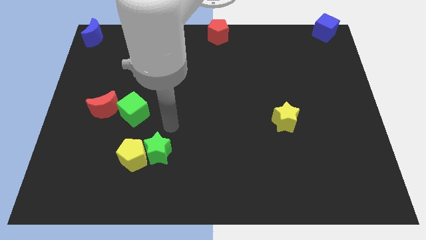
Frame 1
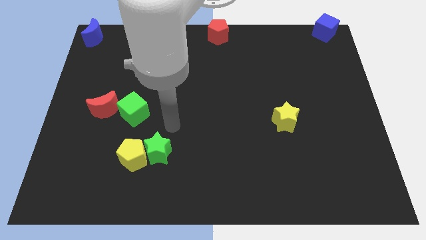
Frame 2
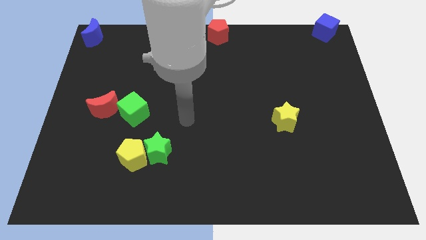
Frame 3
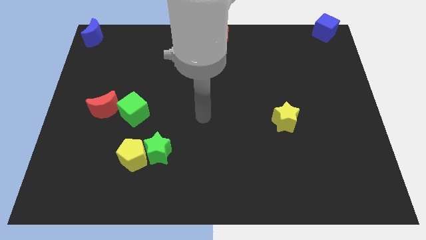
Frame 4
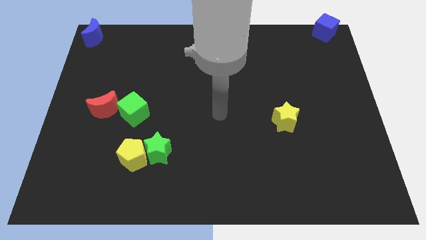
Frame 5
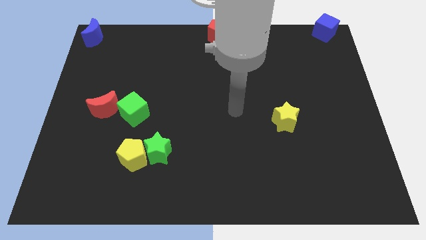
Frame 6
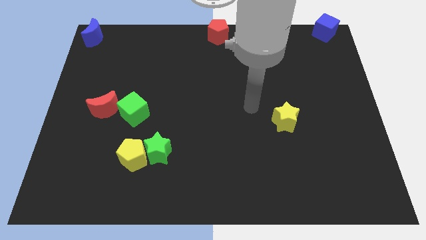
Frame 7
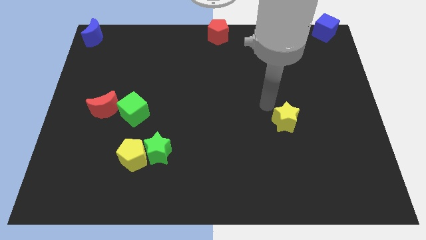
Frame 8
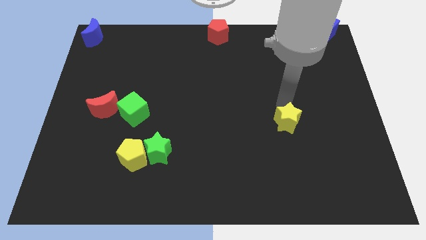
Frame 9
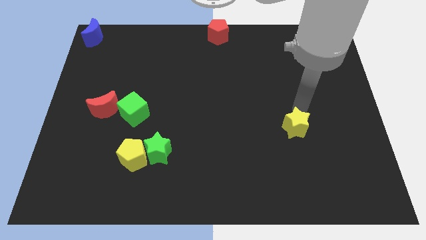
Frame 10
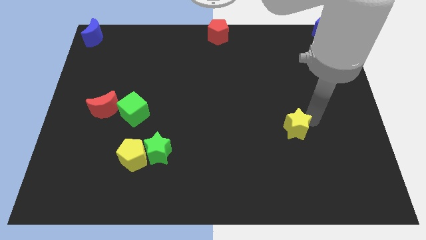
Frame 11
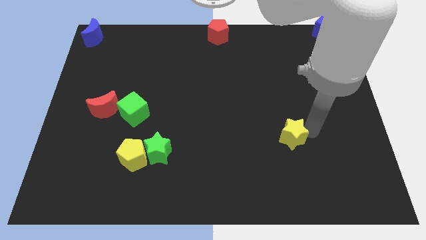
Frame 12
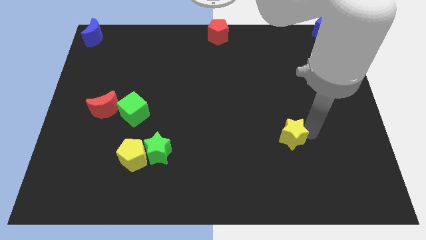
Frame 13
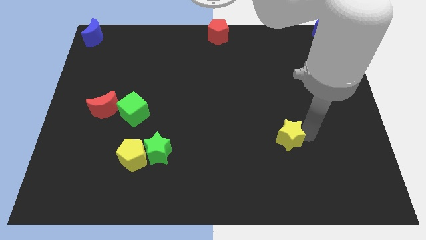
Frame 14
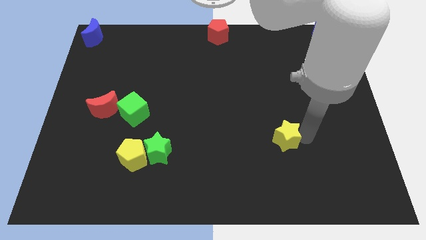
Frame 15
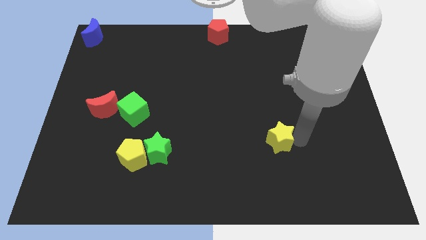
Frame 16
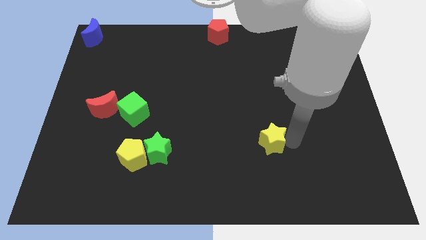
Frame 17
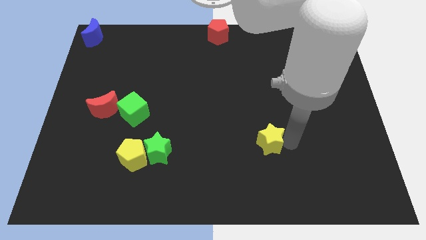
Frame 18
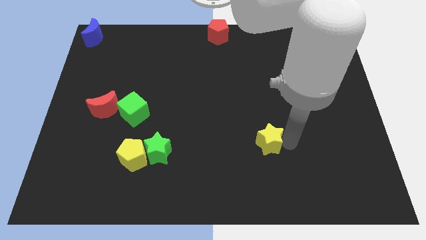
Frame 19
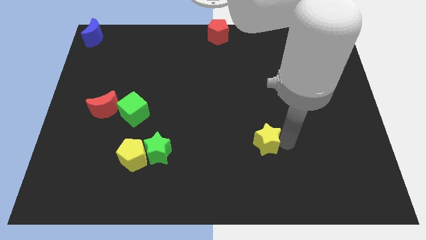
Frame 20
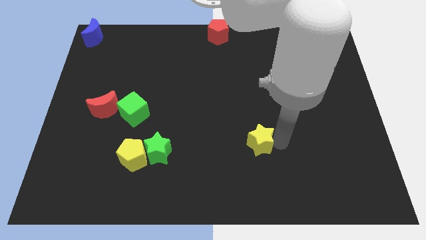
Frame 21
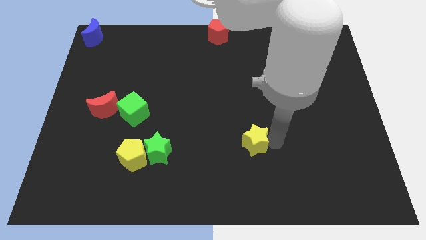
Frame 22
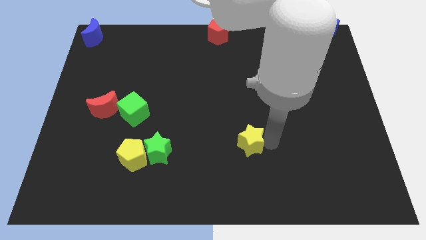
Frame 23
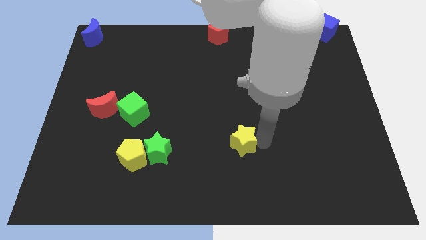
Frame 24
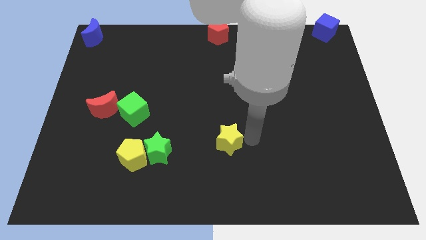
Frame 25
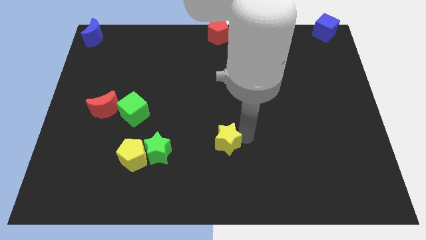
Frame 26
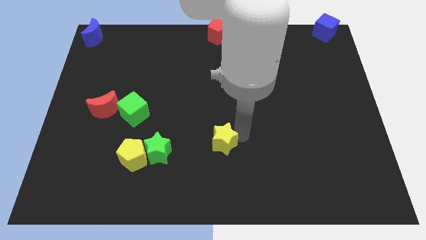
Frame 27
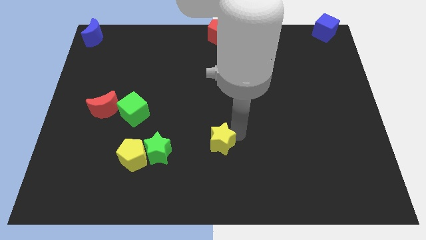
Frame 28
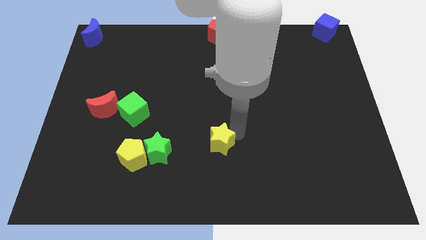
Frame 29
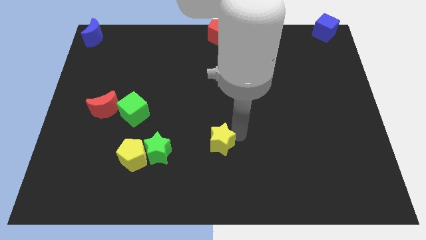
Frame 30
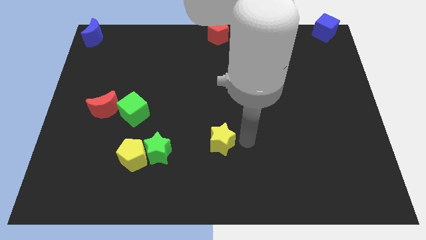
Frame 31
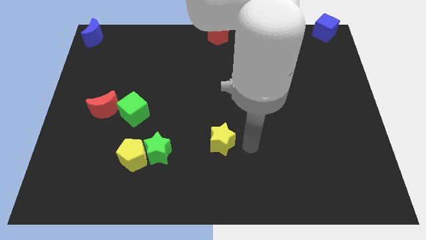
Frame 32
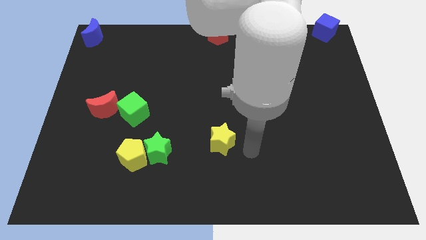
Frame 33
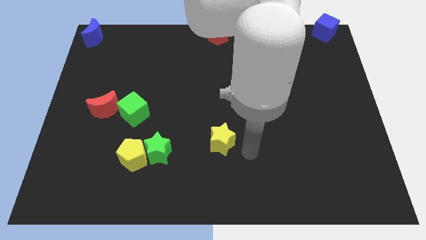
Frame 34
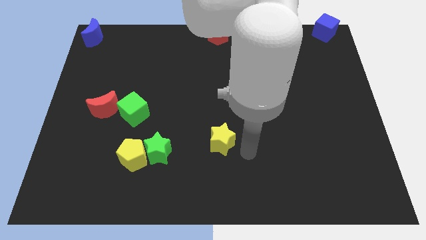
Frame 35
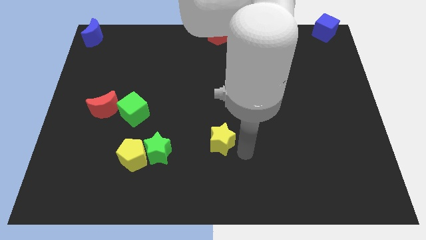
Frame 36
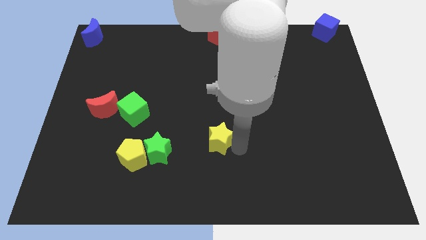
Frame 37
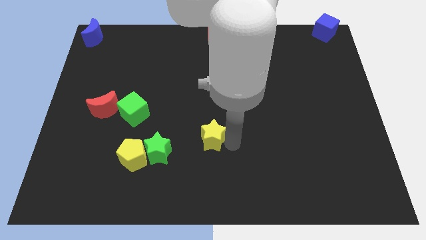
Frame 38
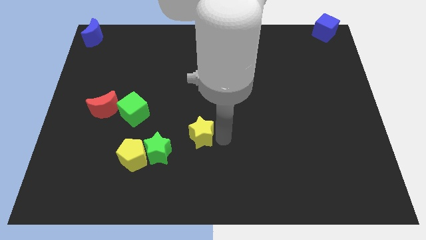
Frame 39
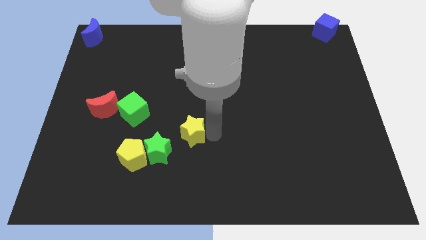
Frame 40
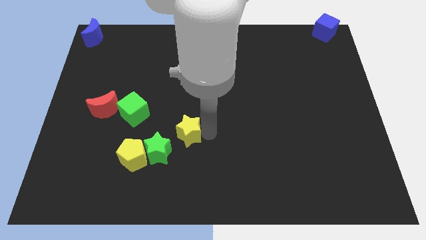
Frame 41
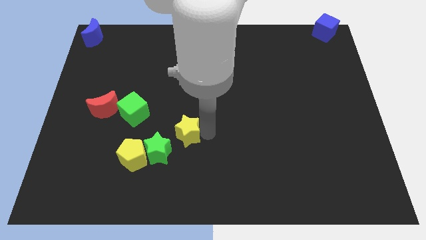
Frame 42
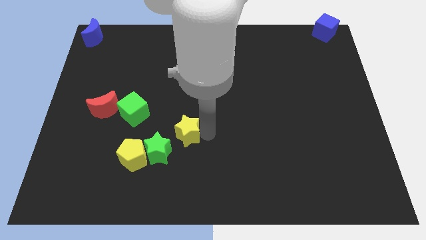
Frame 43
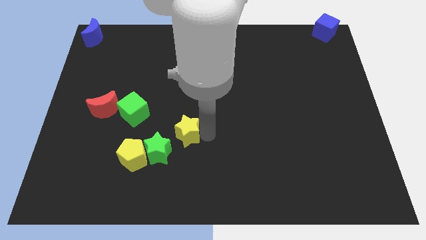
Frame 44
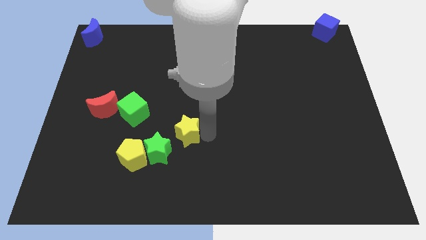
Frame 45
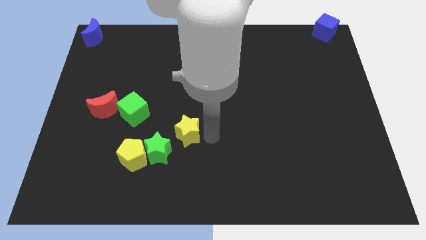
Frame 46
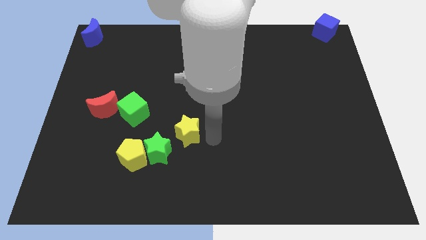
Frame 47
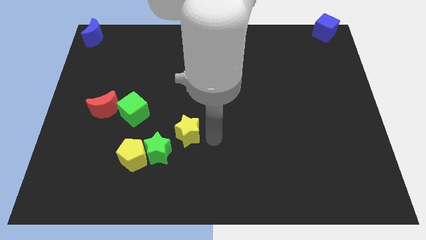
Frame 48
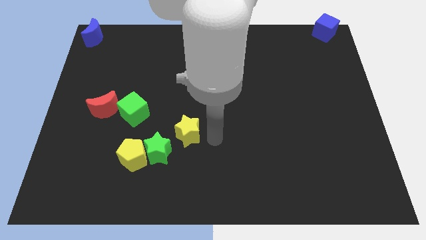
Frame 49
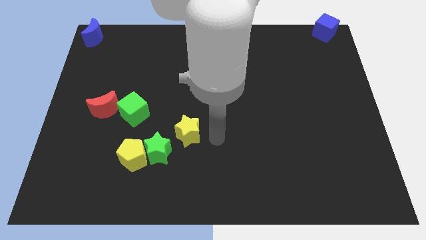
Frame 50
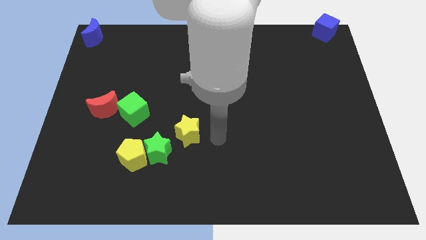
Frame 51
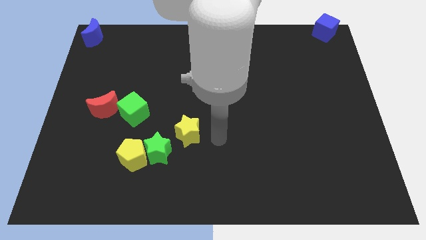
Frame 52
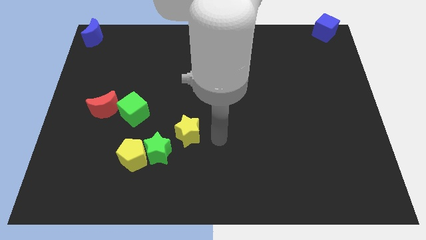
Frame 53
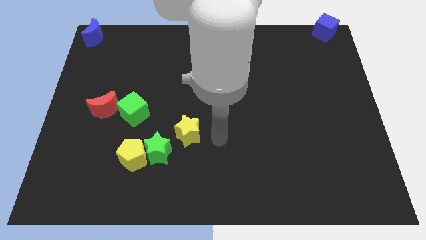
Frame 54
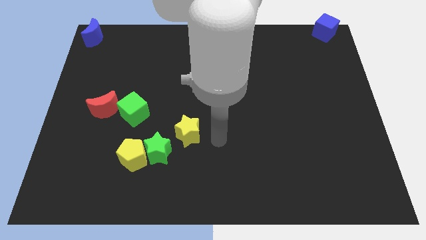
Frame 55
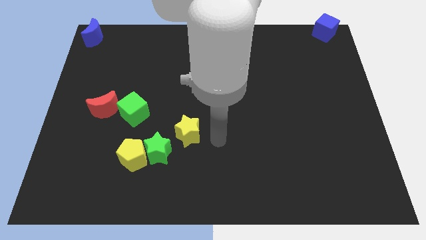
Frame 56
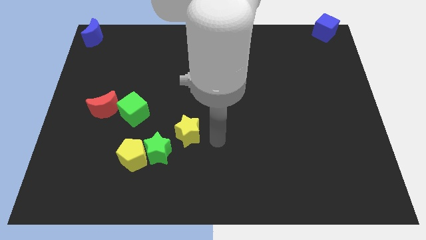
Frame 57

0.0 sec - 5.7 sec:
slide the yellow star towards the top right side of the green star

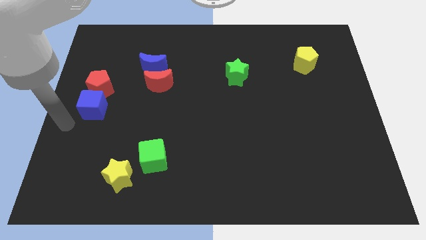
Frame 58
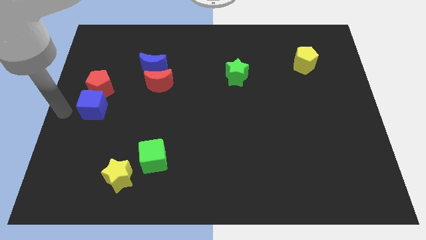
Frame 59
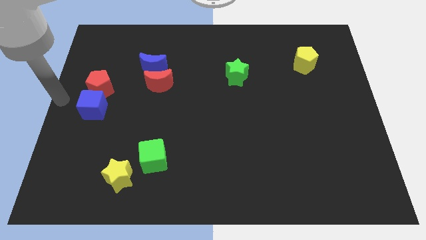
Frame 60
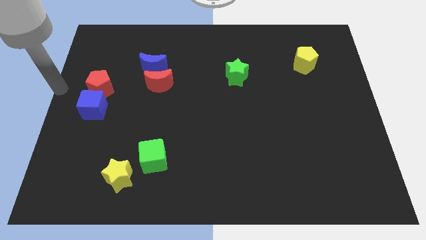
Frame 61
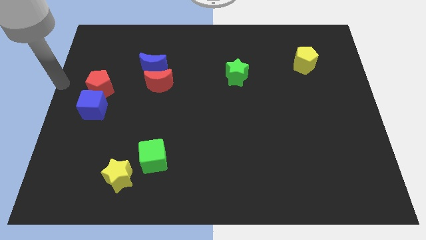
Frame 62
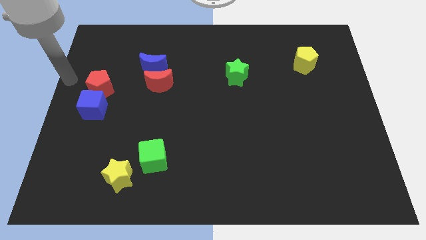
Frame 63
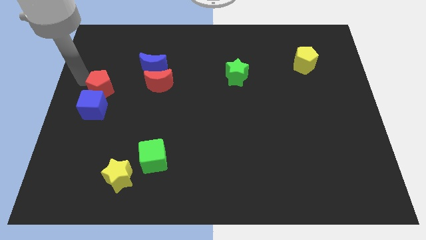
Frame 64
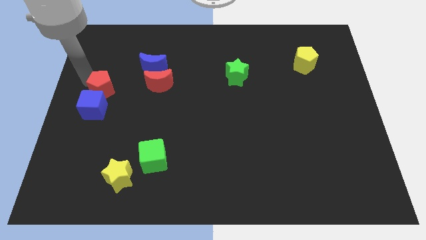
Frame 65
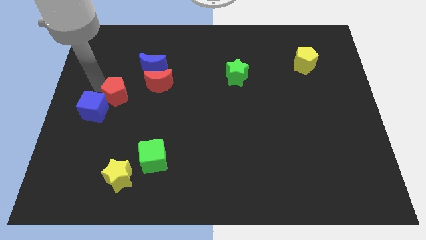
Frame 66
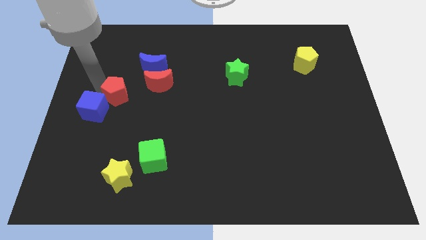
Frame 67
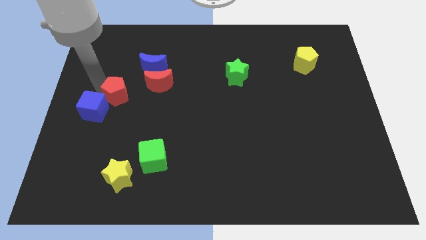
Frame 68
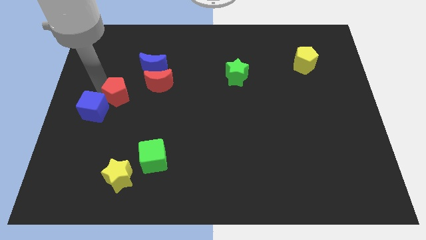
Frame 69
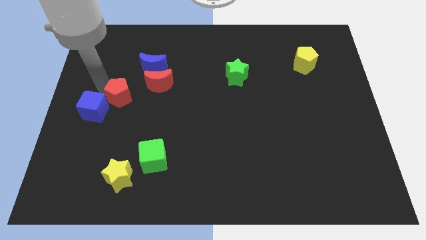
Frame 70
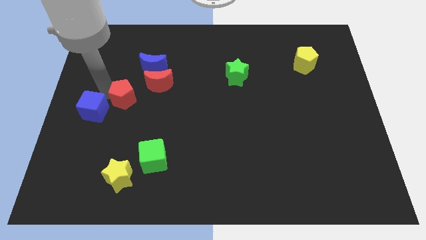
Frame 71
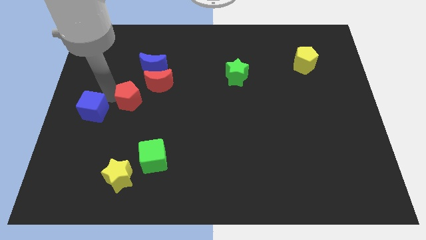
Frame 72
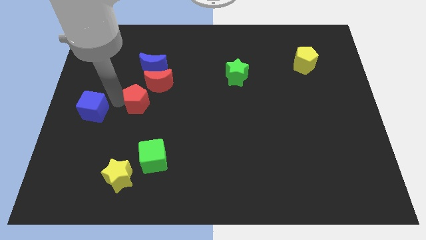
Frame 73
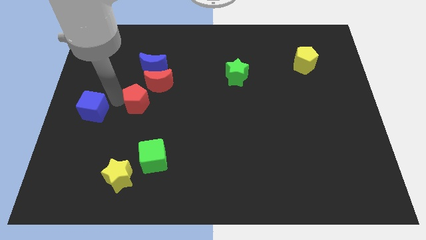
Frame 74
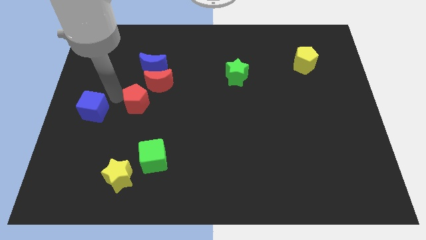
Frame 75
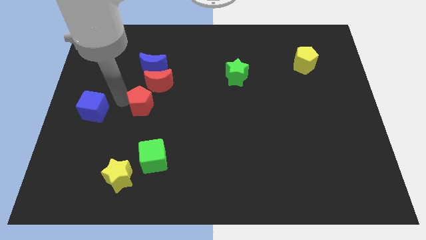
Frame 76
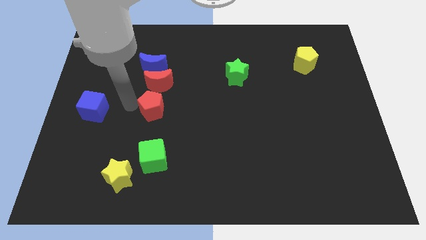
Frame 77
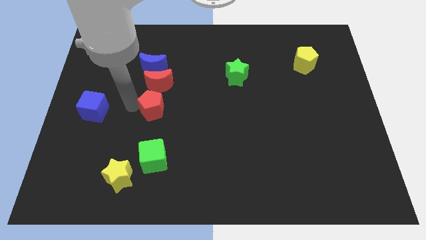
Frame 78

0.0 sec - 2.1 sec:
move the red pentagon to the bottom of the red crescent

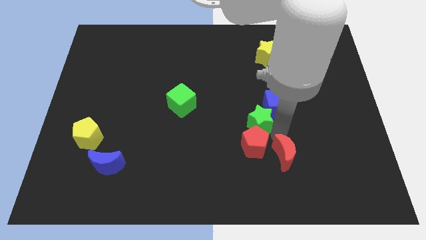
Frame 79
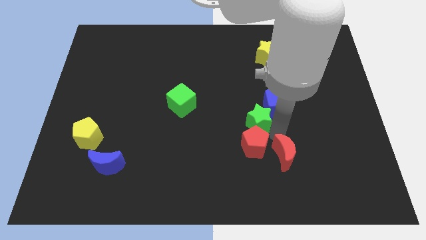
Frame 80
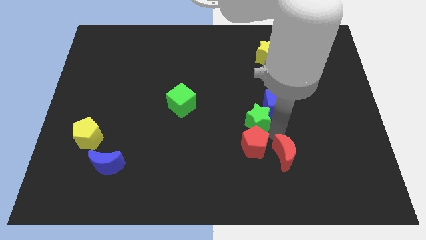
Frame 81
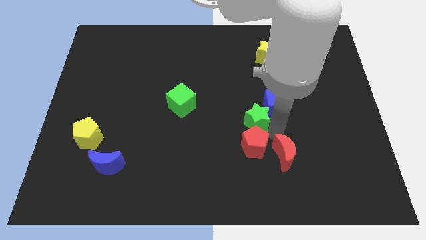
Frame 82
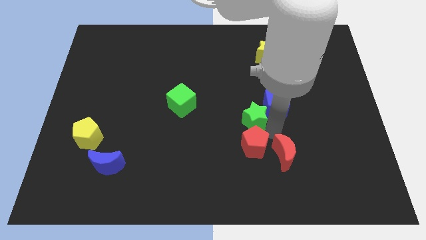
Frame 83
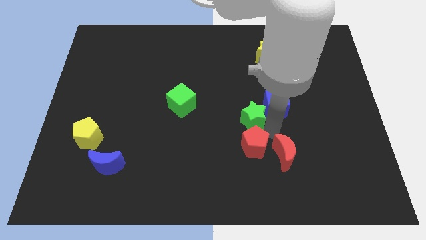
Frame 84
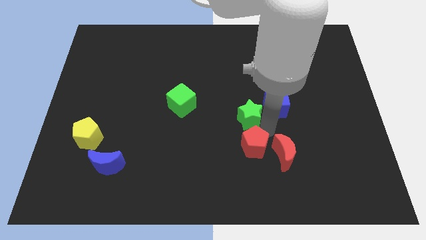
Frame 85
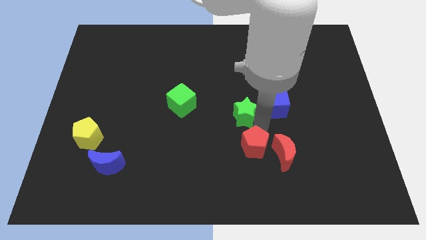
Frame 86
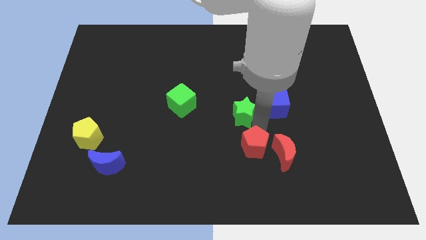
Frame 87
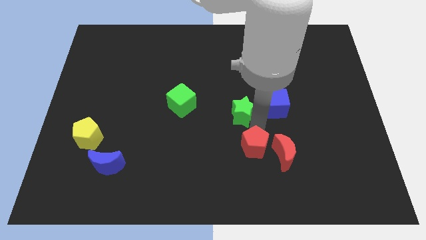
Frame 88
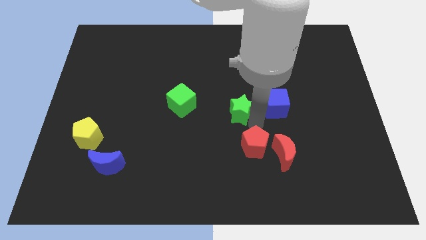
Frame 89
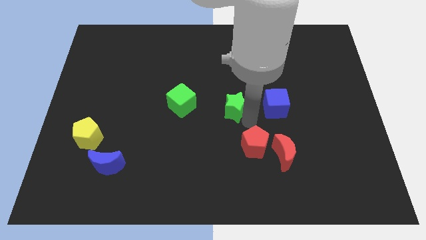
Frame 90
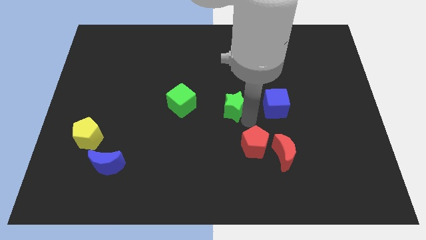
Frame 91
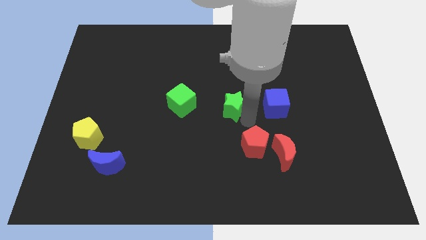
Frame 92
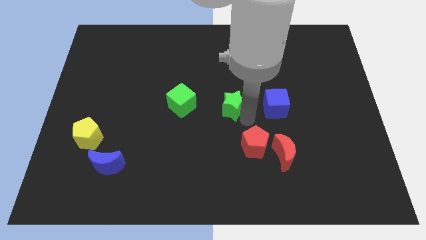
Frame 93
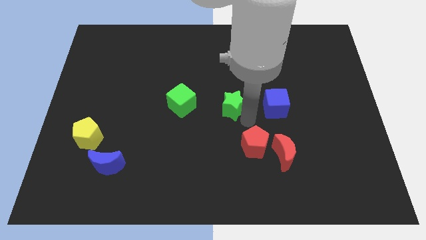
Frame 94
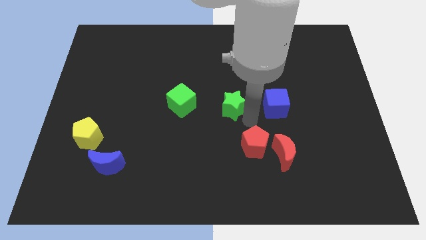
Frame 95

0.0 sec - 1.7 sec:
push the green star to the left of the blue cube
